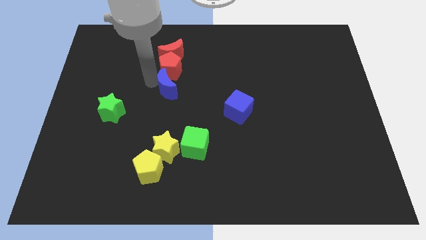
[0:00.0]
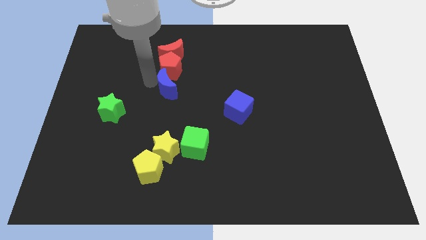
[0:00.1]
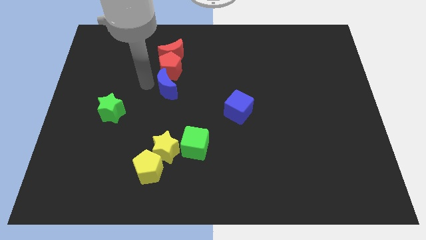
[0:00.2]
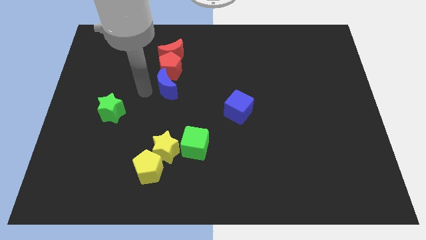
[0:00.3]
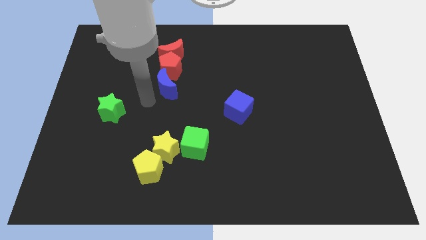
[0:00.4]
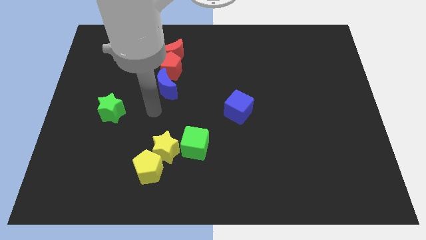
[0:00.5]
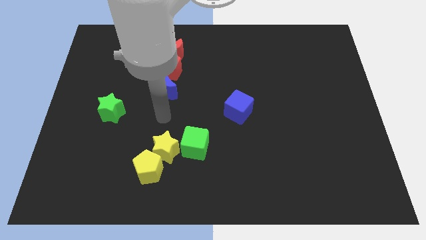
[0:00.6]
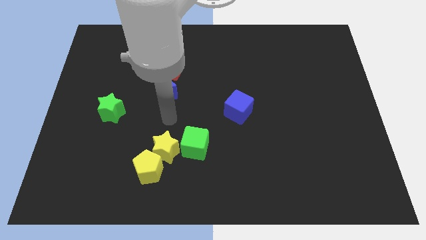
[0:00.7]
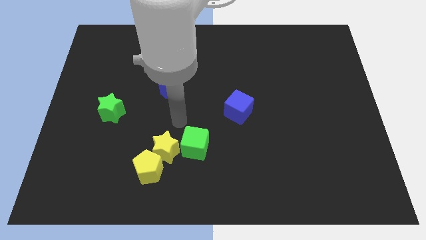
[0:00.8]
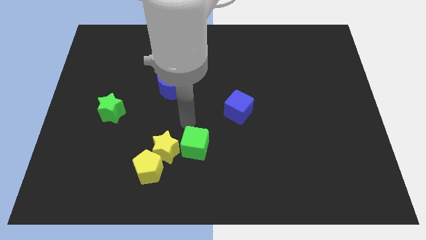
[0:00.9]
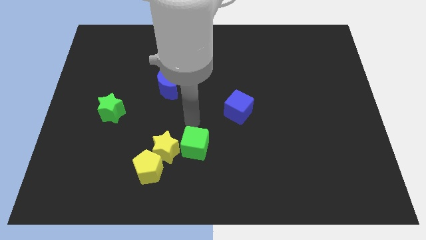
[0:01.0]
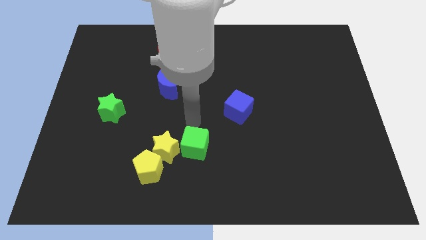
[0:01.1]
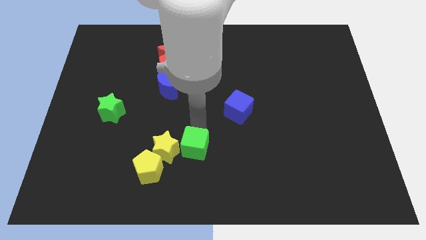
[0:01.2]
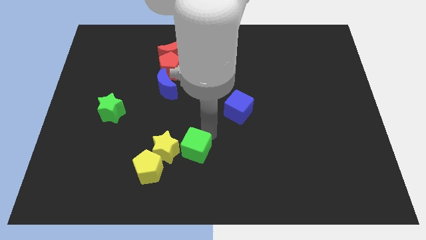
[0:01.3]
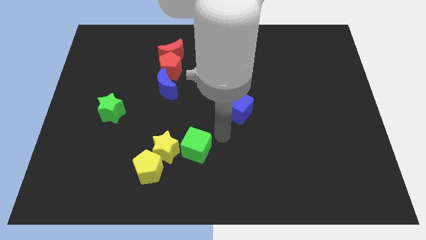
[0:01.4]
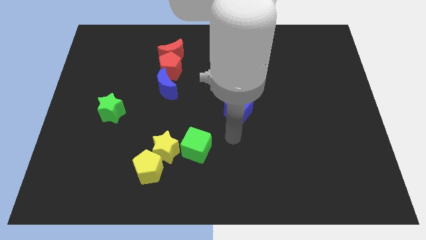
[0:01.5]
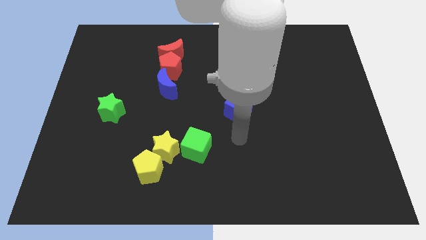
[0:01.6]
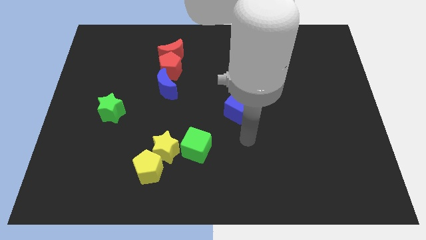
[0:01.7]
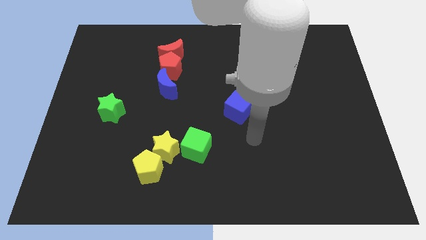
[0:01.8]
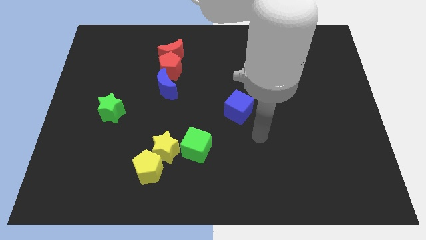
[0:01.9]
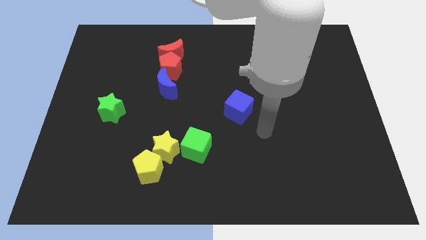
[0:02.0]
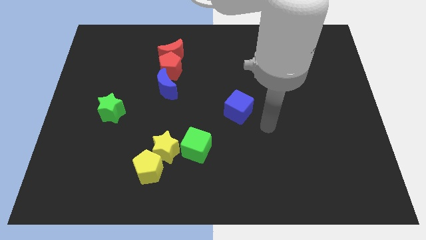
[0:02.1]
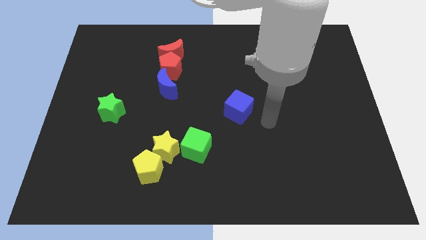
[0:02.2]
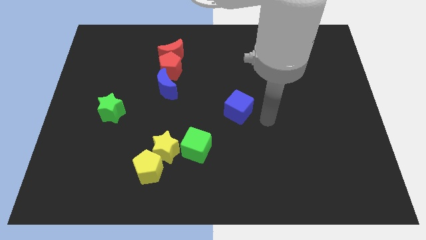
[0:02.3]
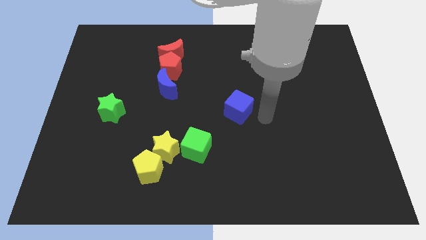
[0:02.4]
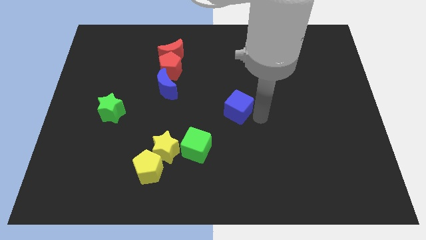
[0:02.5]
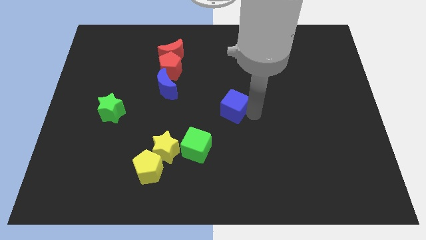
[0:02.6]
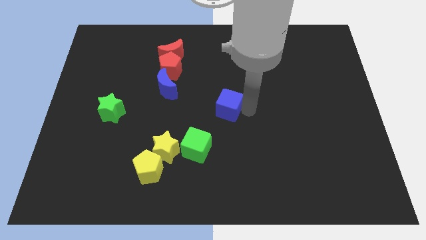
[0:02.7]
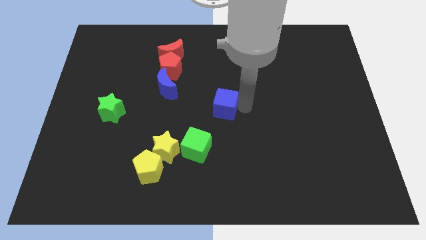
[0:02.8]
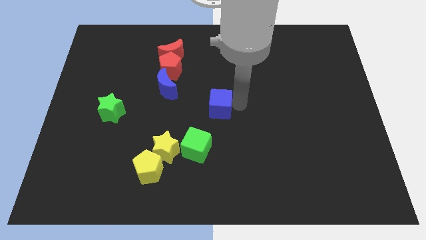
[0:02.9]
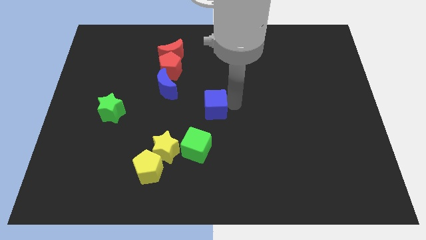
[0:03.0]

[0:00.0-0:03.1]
place the blue cube at the center of the board

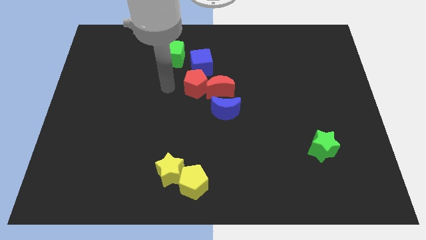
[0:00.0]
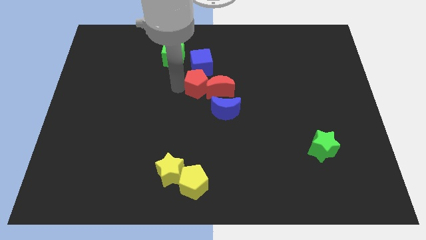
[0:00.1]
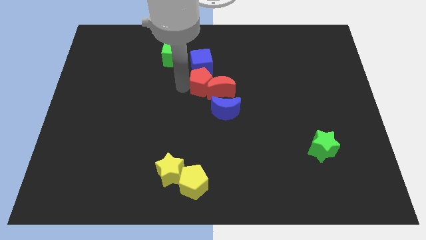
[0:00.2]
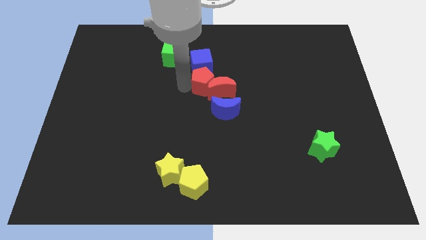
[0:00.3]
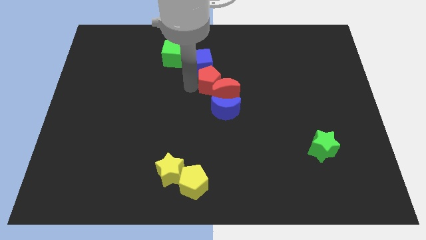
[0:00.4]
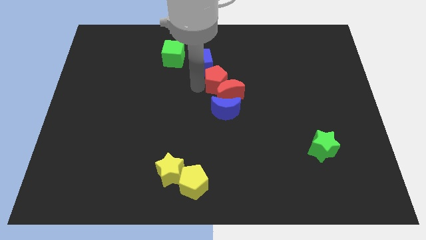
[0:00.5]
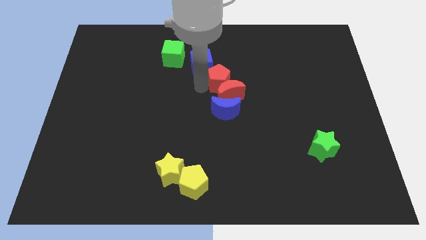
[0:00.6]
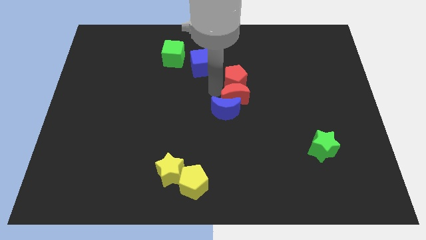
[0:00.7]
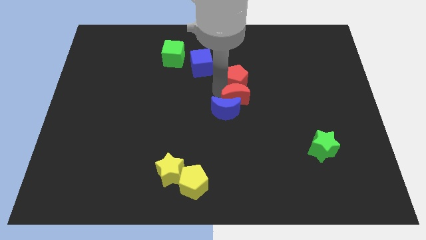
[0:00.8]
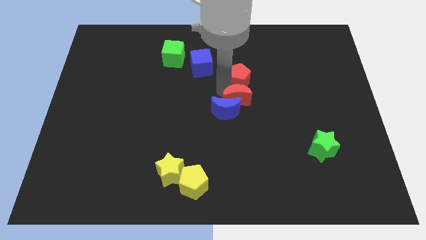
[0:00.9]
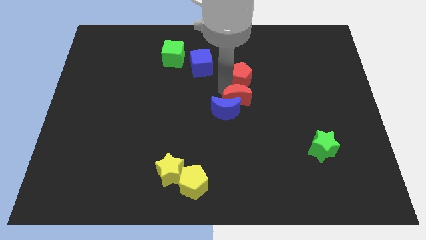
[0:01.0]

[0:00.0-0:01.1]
place the red pentagon above the red crescent

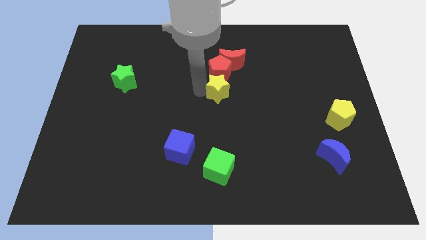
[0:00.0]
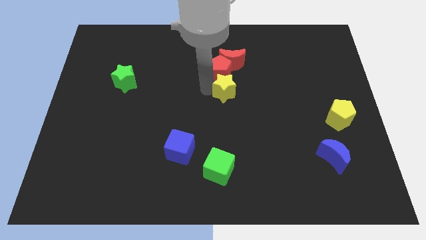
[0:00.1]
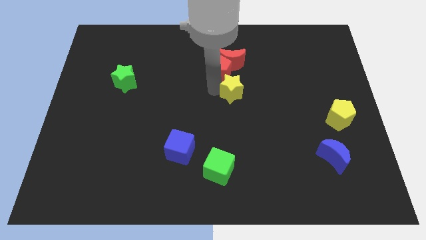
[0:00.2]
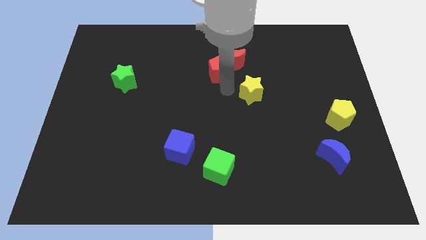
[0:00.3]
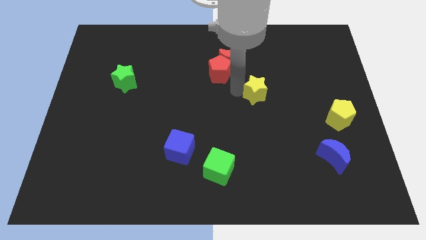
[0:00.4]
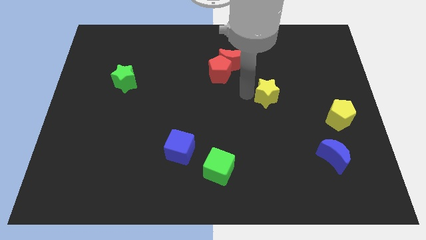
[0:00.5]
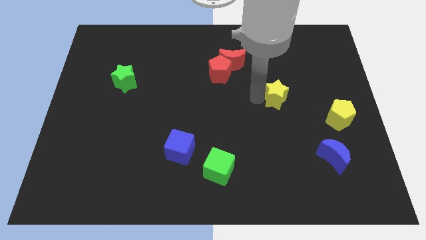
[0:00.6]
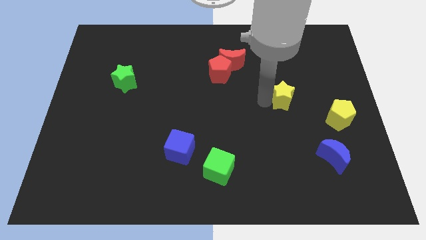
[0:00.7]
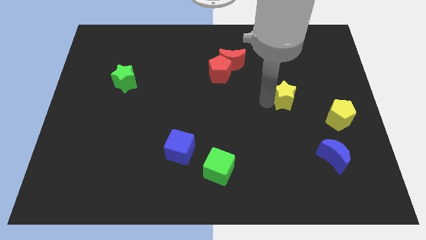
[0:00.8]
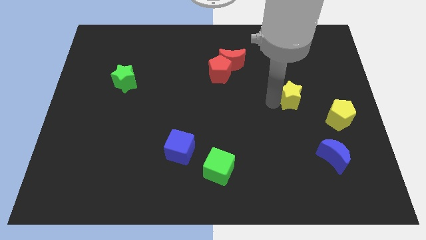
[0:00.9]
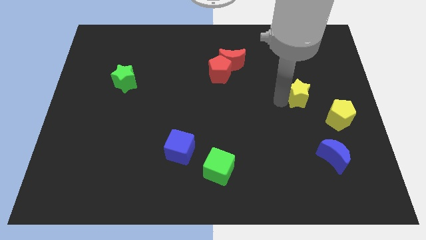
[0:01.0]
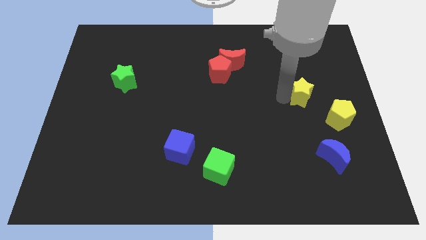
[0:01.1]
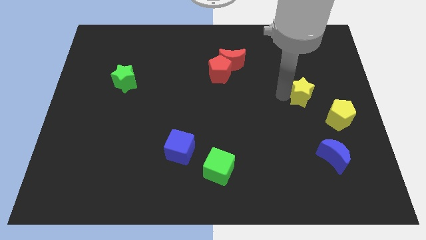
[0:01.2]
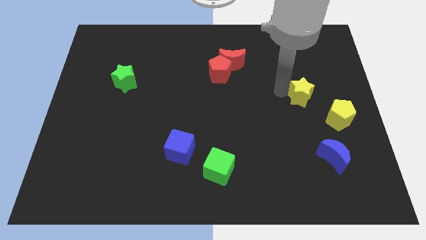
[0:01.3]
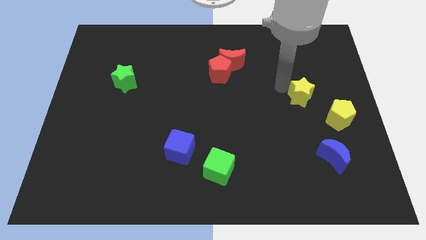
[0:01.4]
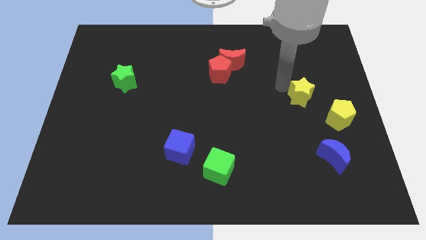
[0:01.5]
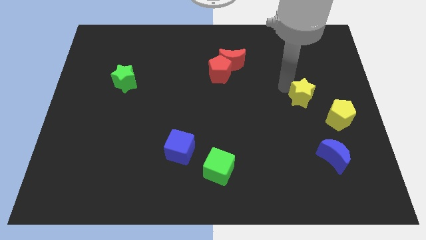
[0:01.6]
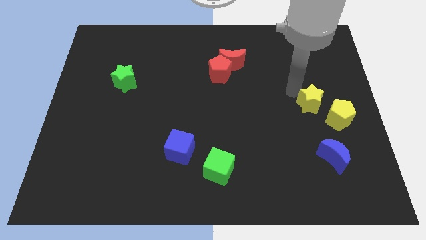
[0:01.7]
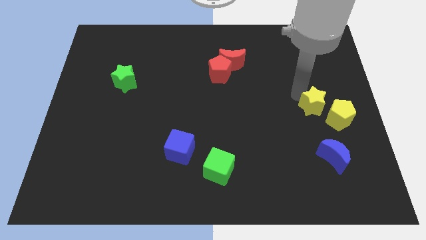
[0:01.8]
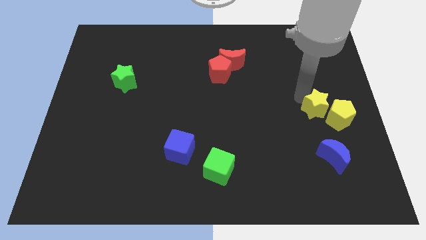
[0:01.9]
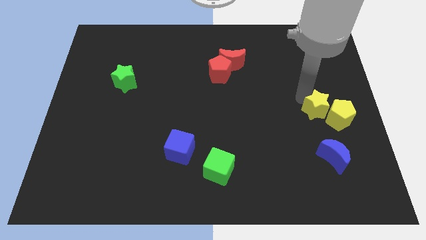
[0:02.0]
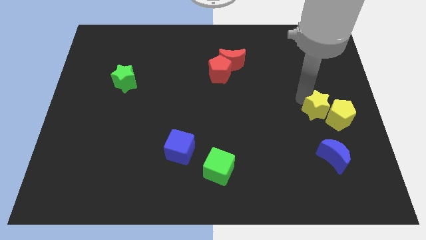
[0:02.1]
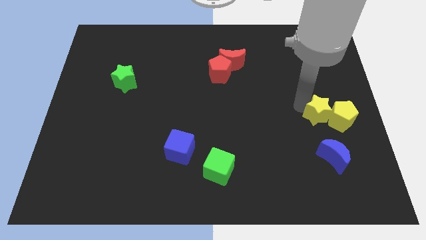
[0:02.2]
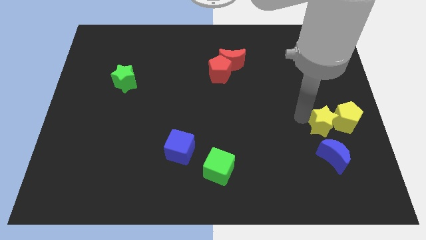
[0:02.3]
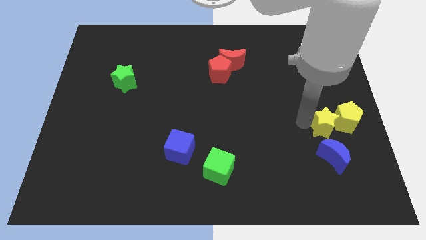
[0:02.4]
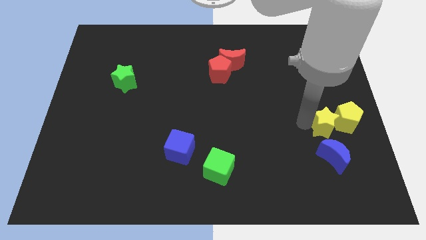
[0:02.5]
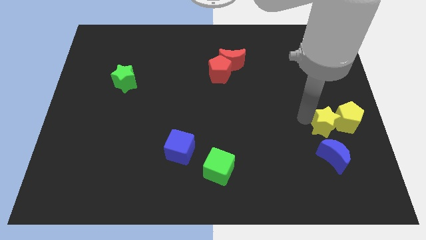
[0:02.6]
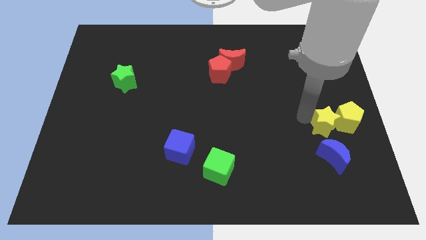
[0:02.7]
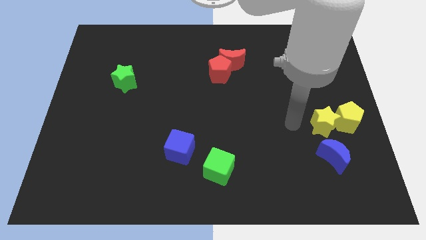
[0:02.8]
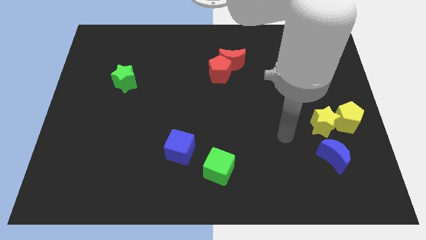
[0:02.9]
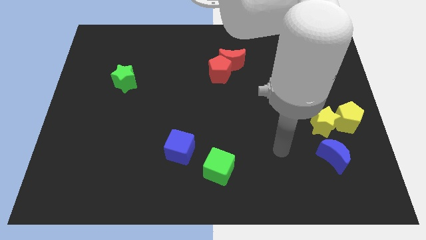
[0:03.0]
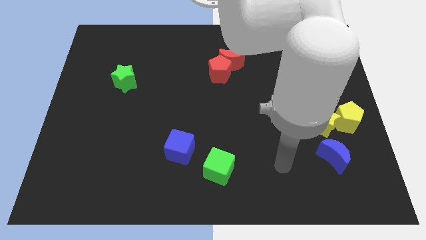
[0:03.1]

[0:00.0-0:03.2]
push the yellow star into the yellow pentagon

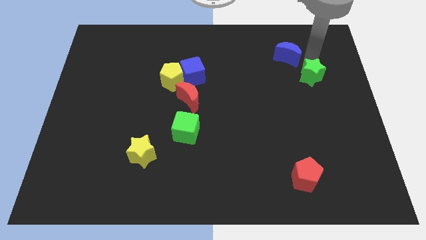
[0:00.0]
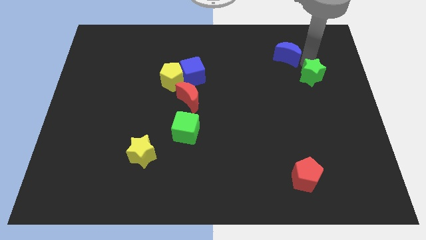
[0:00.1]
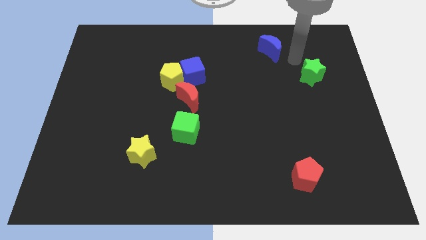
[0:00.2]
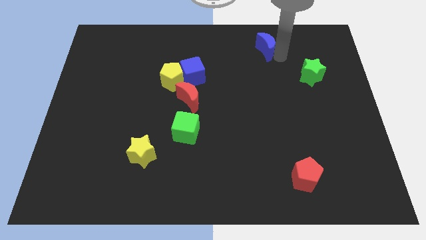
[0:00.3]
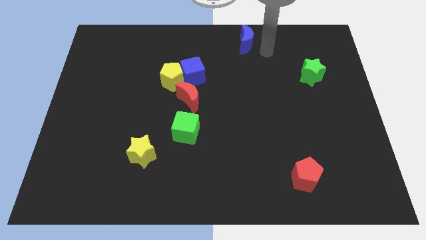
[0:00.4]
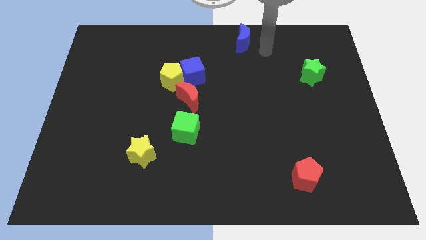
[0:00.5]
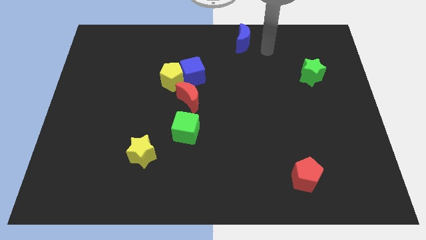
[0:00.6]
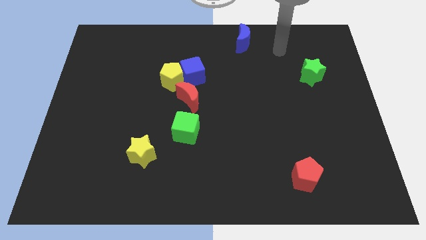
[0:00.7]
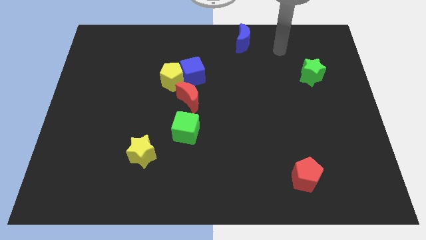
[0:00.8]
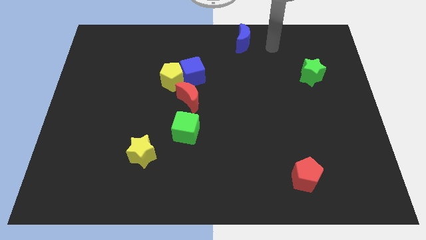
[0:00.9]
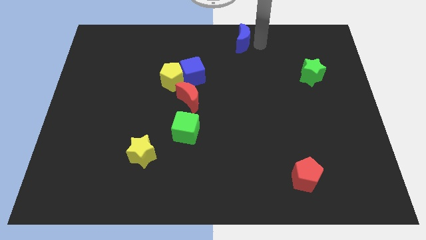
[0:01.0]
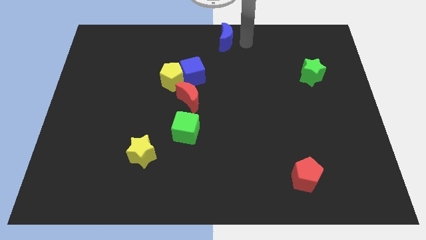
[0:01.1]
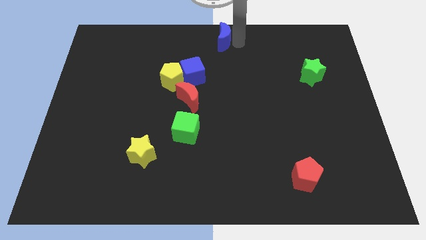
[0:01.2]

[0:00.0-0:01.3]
separate the blue moon towards the top side

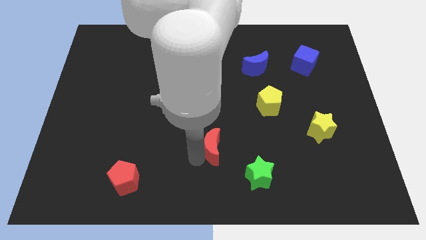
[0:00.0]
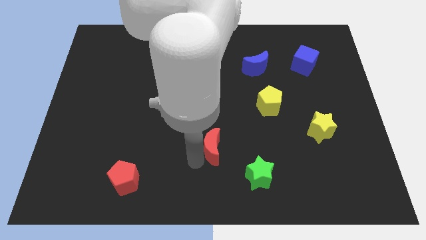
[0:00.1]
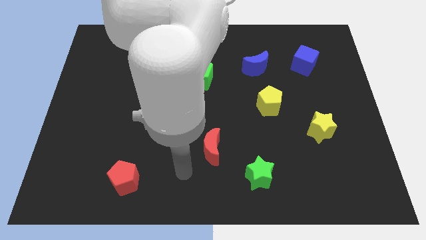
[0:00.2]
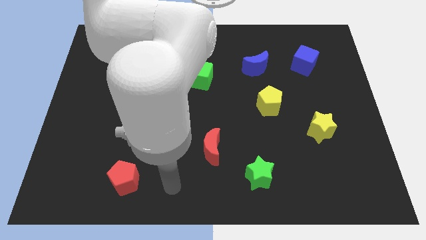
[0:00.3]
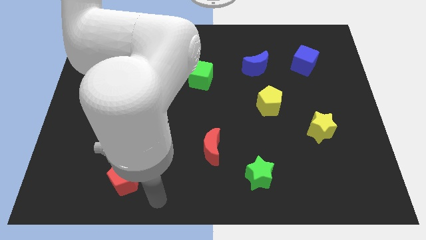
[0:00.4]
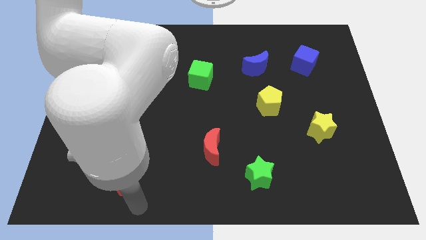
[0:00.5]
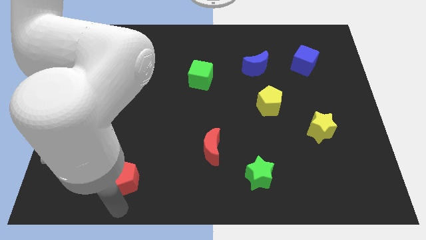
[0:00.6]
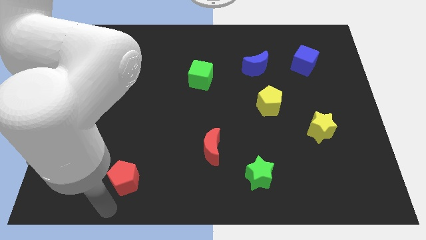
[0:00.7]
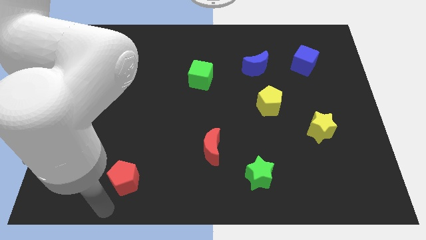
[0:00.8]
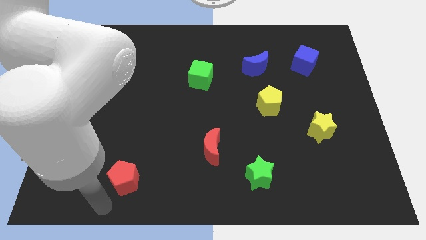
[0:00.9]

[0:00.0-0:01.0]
move the arm towards the red pentagon
